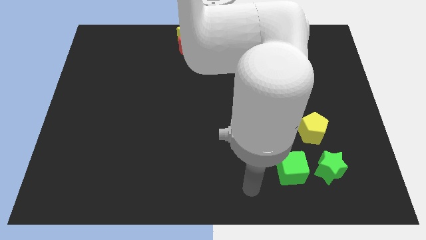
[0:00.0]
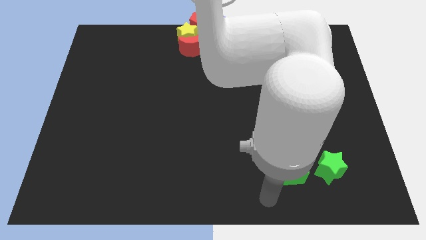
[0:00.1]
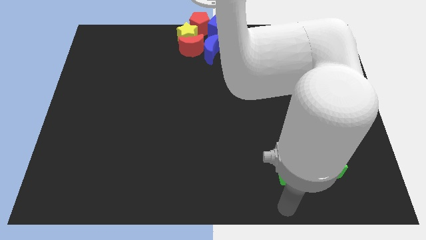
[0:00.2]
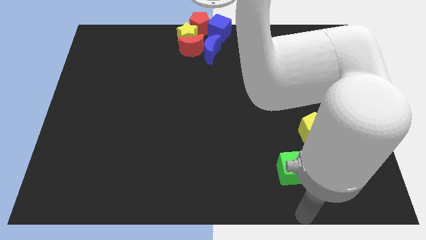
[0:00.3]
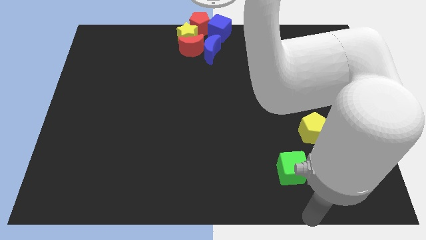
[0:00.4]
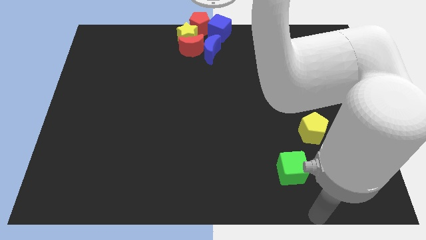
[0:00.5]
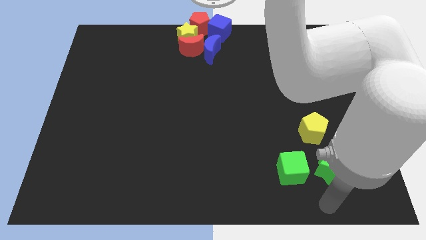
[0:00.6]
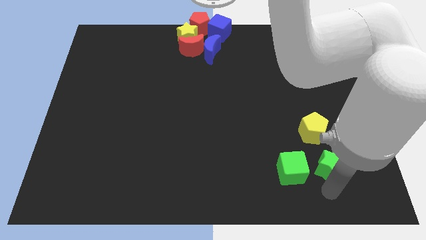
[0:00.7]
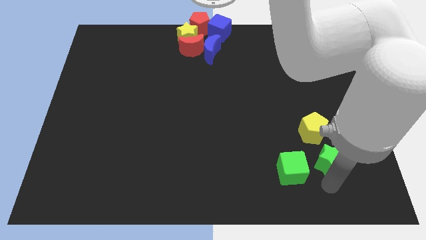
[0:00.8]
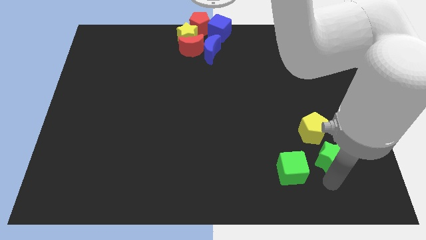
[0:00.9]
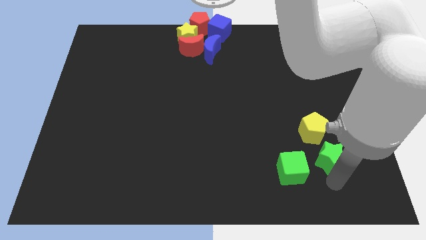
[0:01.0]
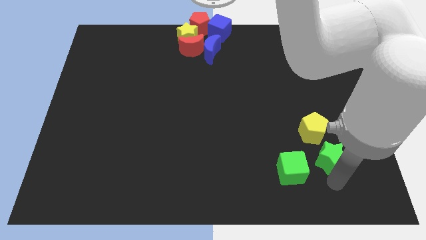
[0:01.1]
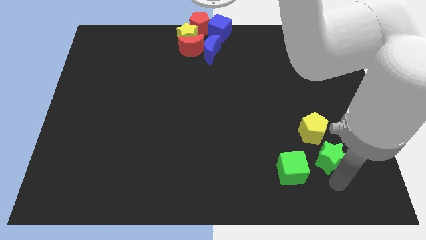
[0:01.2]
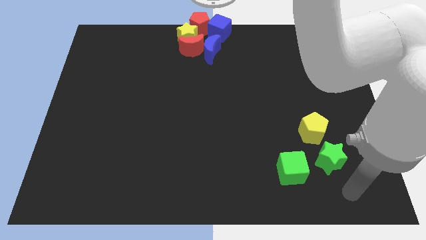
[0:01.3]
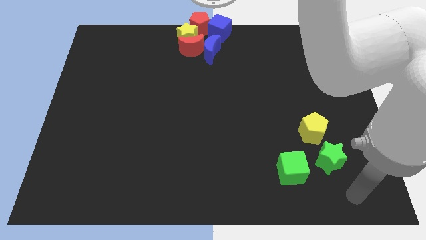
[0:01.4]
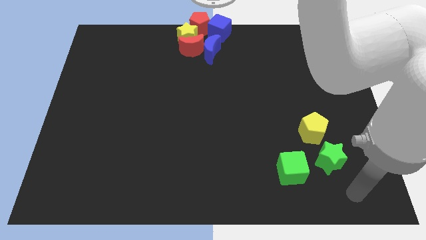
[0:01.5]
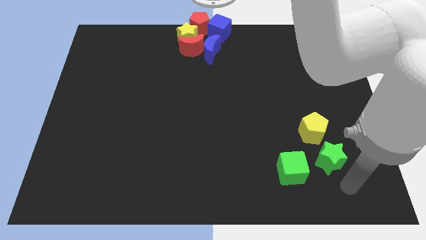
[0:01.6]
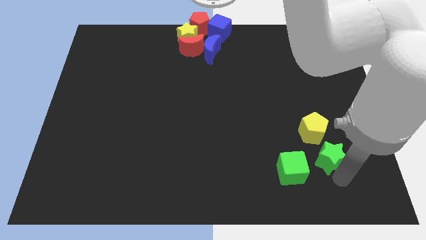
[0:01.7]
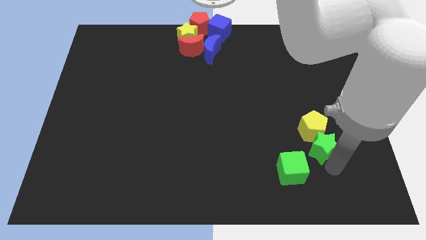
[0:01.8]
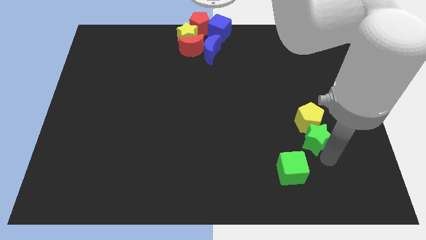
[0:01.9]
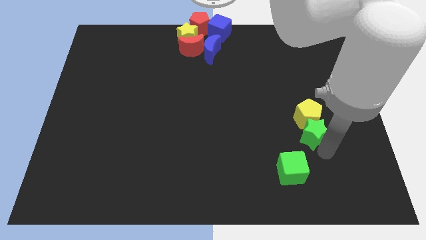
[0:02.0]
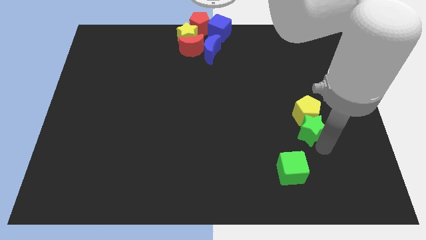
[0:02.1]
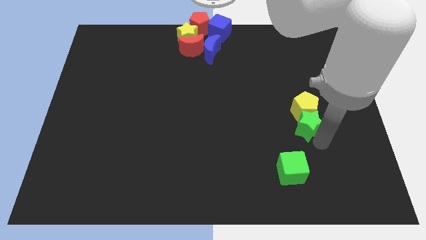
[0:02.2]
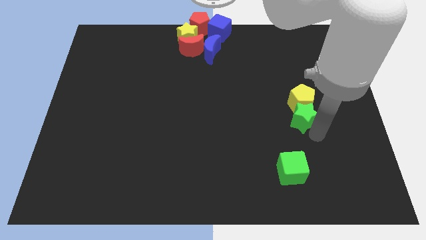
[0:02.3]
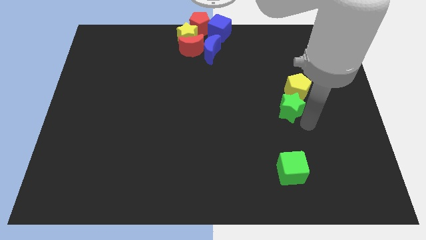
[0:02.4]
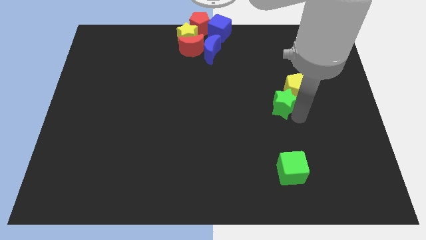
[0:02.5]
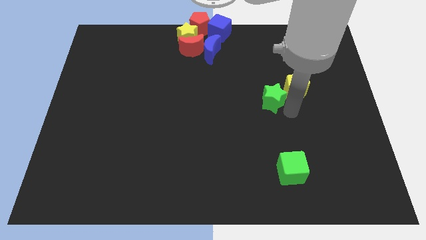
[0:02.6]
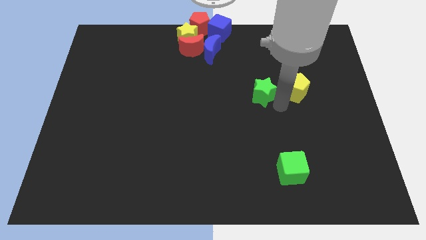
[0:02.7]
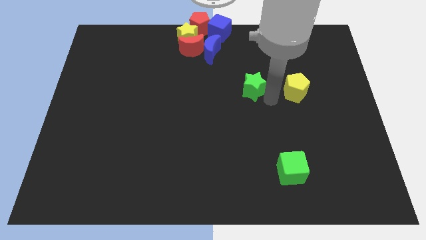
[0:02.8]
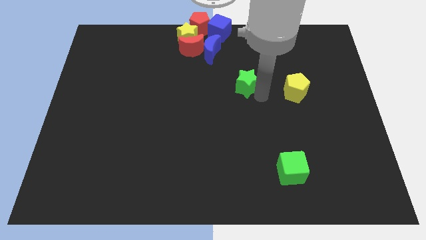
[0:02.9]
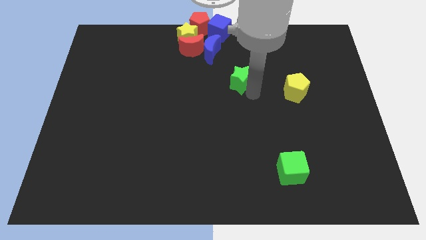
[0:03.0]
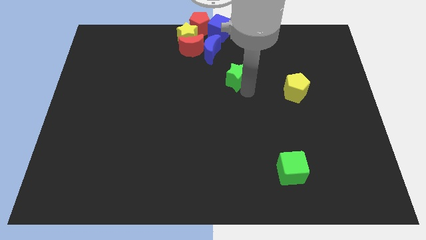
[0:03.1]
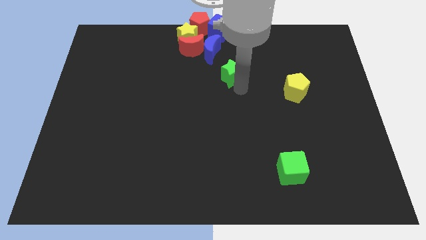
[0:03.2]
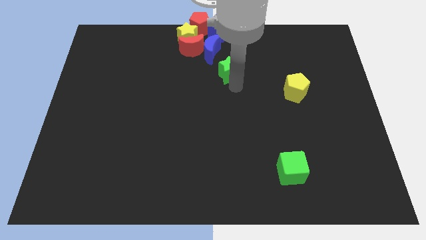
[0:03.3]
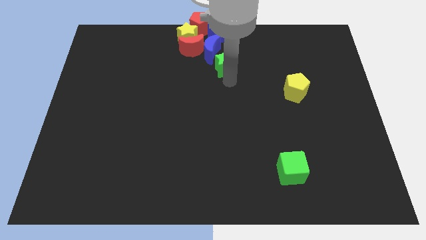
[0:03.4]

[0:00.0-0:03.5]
separate green star from green cube

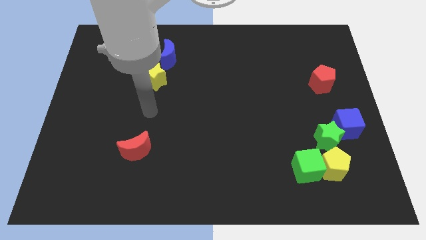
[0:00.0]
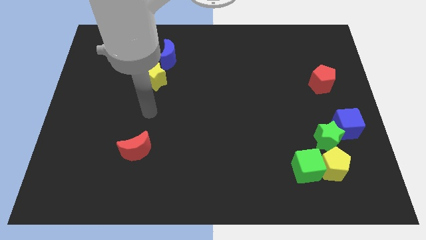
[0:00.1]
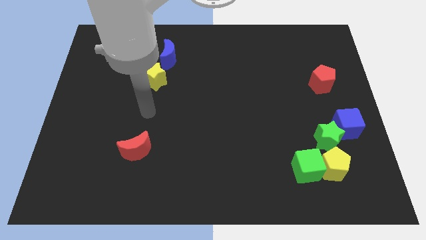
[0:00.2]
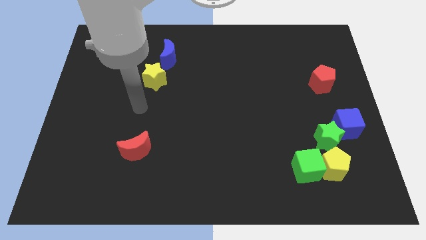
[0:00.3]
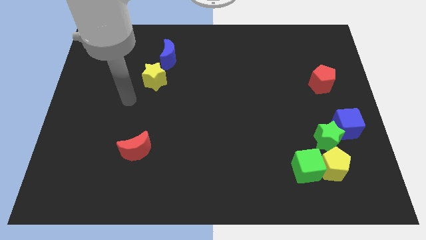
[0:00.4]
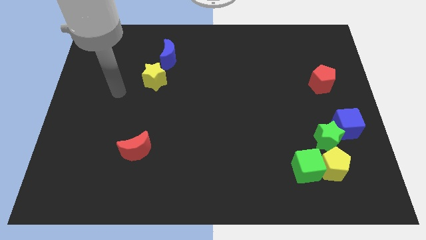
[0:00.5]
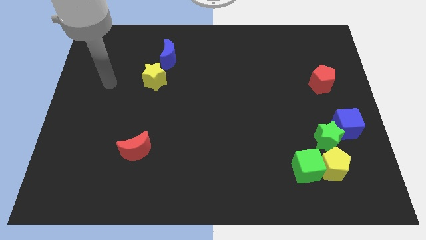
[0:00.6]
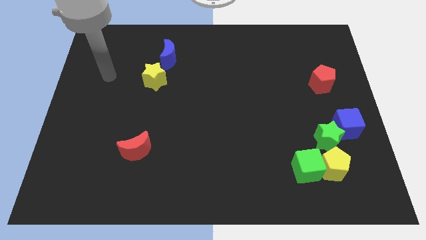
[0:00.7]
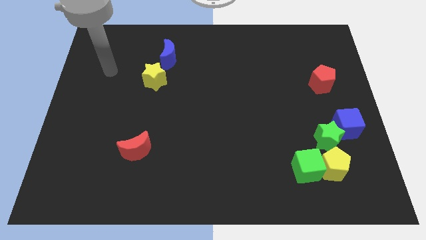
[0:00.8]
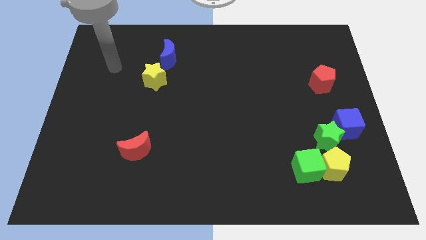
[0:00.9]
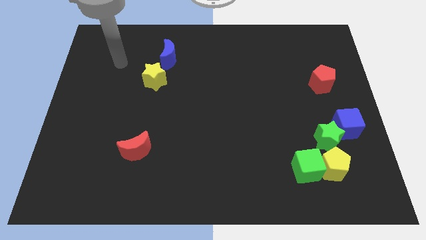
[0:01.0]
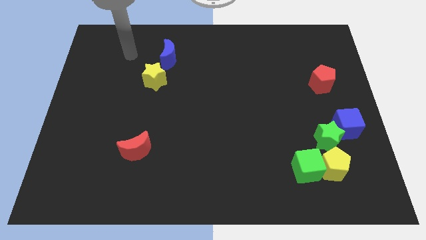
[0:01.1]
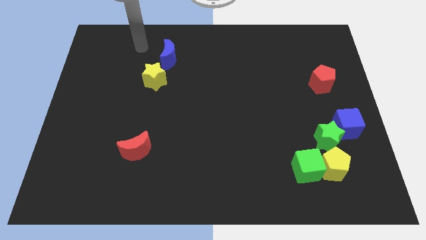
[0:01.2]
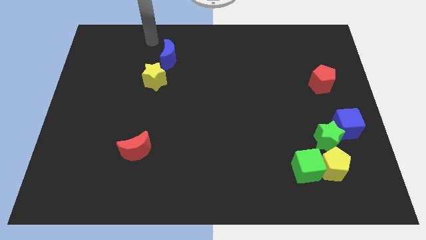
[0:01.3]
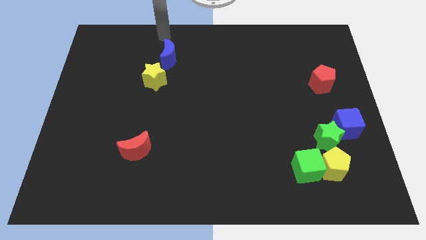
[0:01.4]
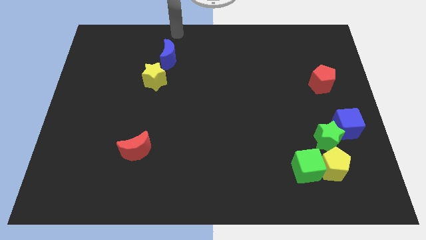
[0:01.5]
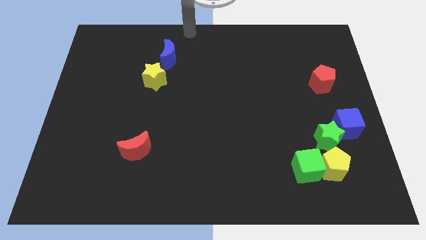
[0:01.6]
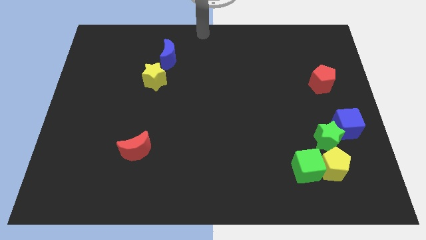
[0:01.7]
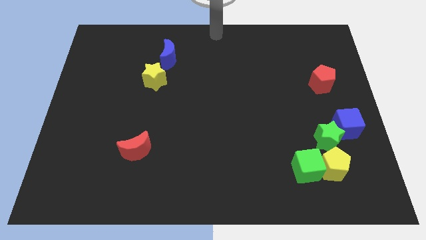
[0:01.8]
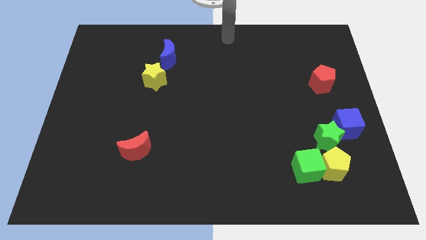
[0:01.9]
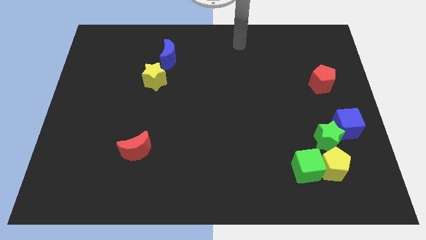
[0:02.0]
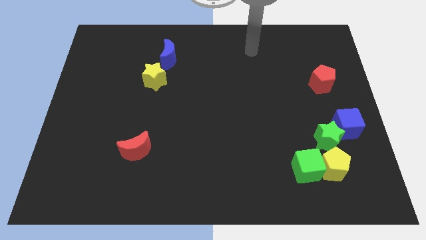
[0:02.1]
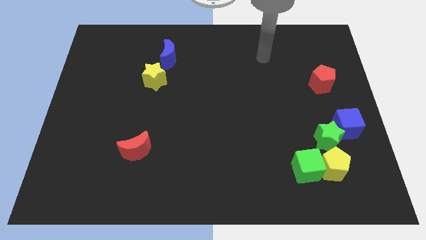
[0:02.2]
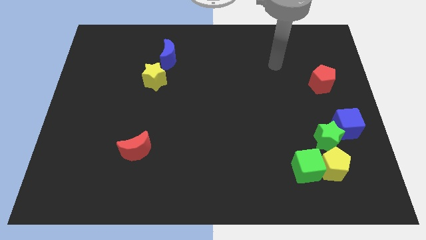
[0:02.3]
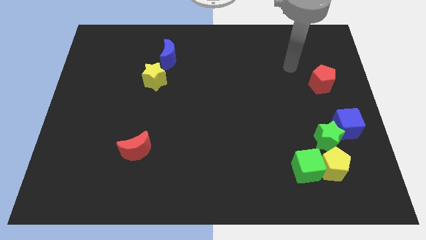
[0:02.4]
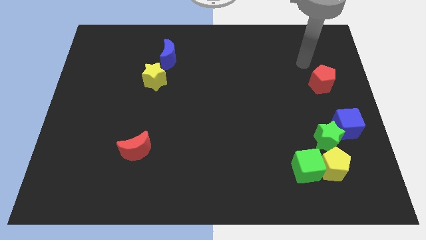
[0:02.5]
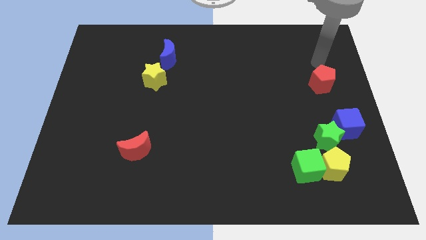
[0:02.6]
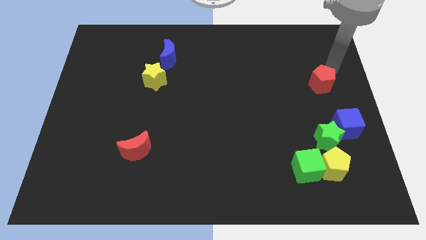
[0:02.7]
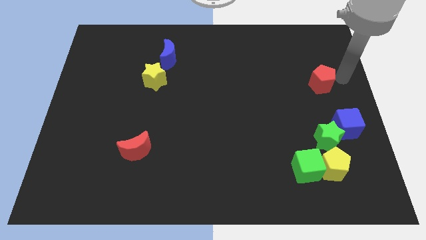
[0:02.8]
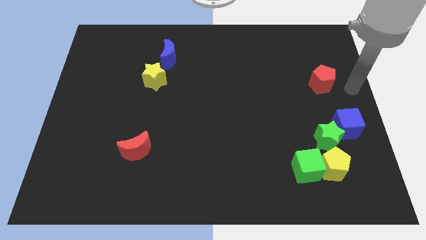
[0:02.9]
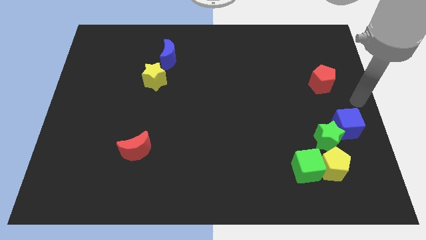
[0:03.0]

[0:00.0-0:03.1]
move your arm towards the center right

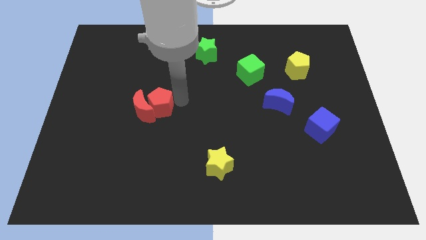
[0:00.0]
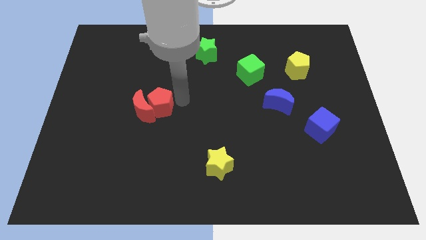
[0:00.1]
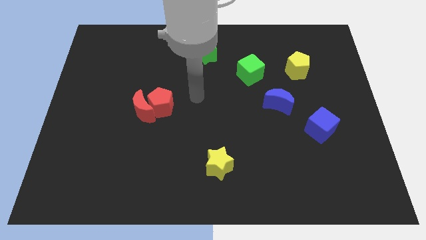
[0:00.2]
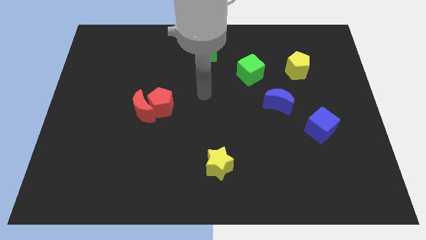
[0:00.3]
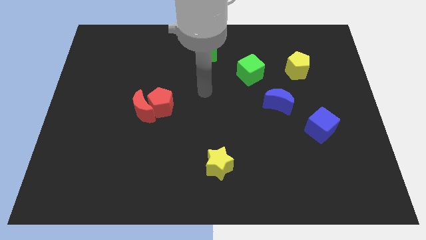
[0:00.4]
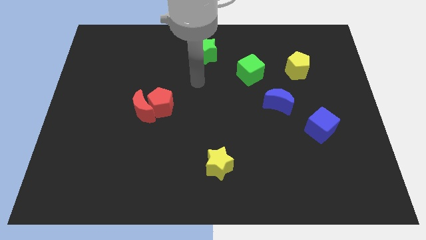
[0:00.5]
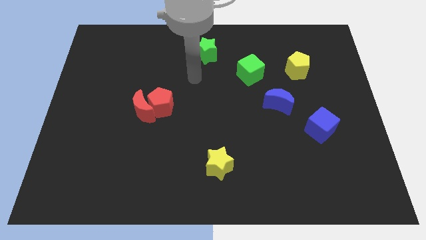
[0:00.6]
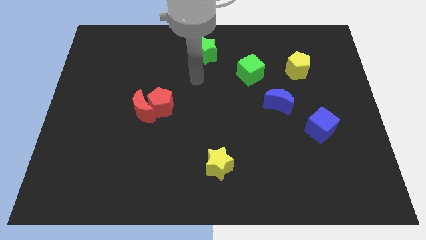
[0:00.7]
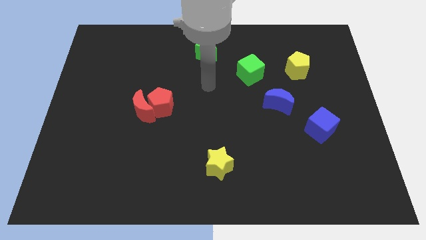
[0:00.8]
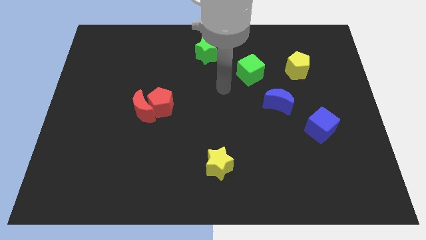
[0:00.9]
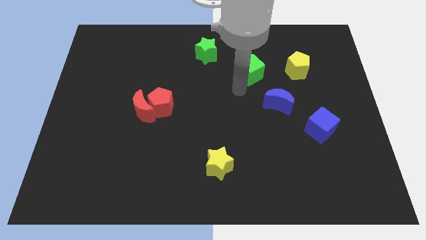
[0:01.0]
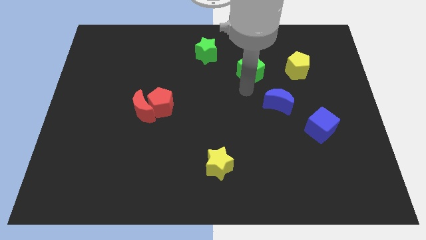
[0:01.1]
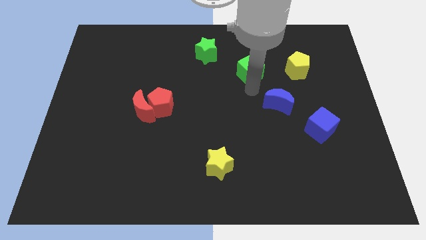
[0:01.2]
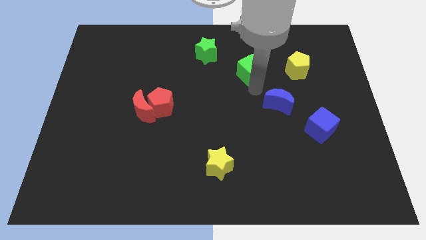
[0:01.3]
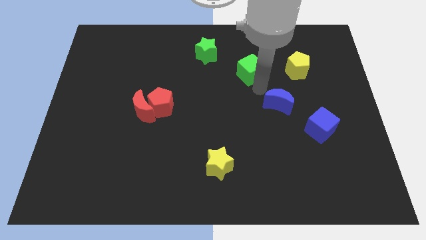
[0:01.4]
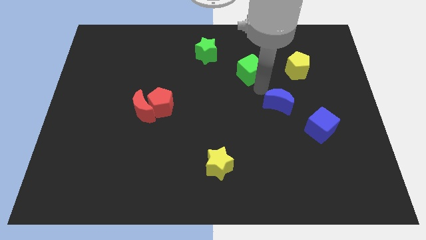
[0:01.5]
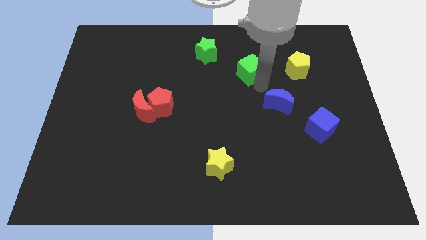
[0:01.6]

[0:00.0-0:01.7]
move arm near to the green cube

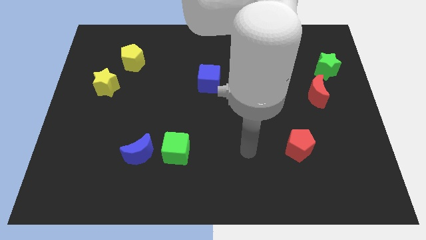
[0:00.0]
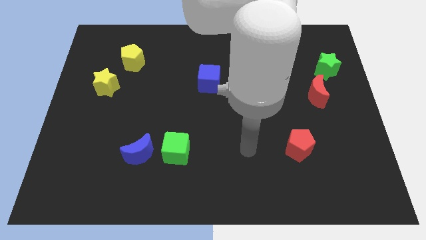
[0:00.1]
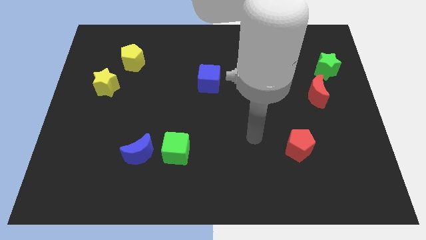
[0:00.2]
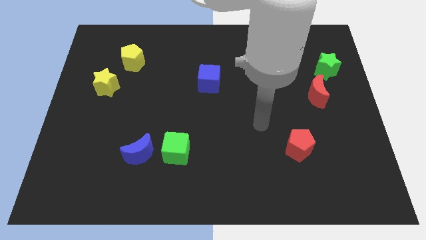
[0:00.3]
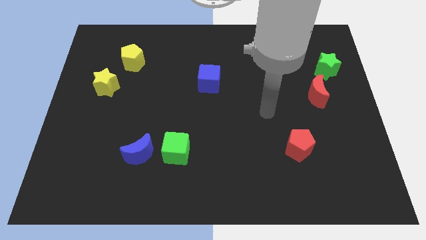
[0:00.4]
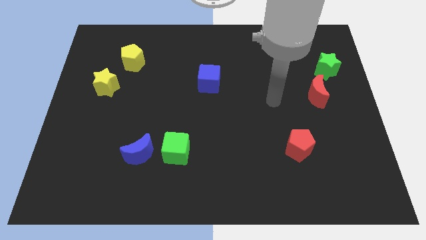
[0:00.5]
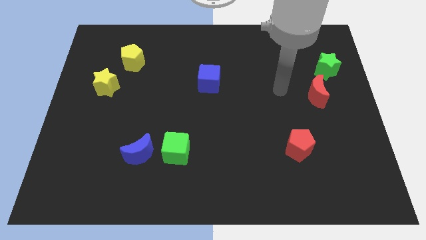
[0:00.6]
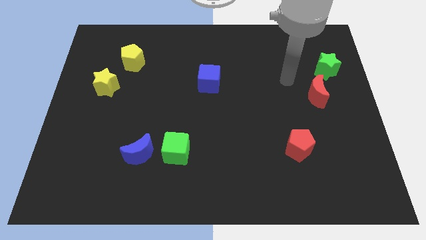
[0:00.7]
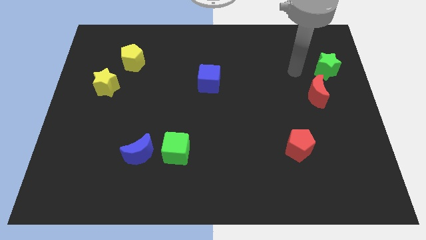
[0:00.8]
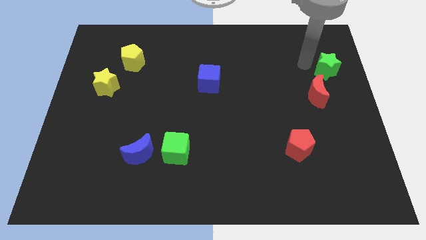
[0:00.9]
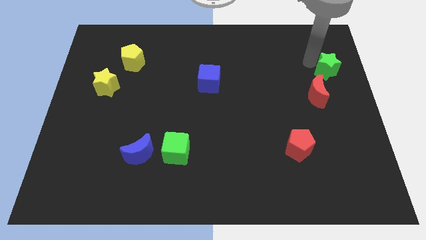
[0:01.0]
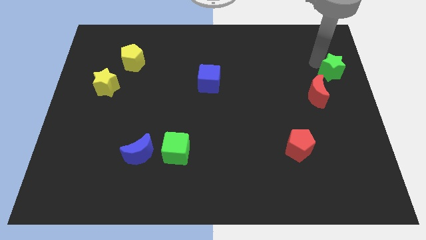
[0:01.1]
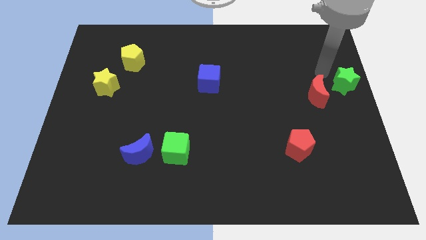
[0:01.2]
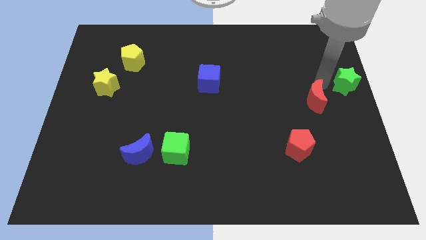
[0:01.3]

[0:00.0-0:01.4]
move the green star slightly to the center right
